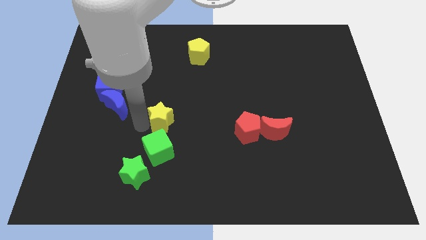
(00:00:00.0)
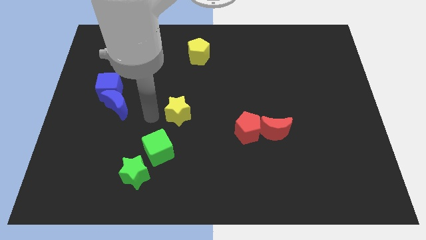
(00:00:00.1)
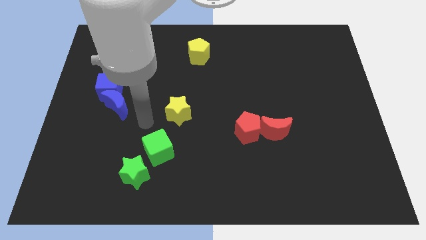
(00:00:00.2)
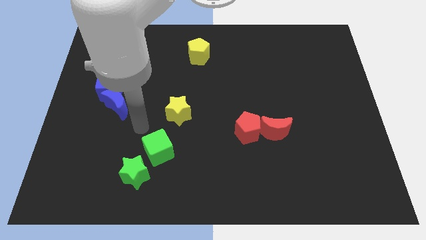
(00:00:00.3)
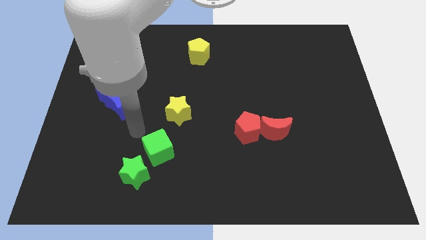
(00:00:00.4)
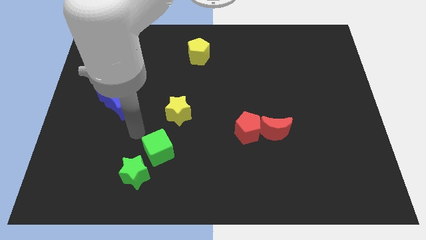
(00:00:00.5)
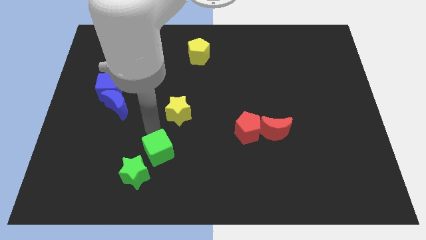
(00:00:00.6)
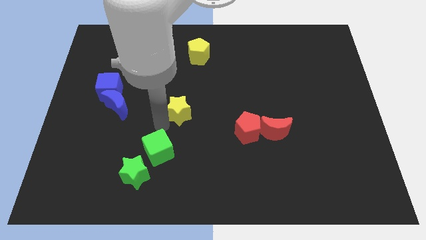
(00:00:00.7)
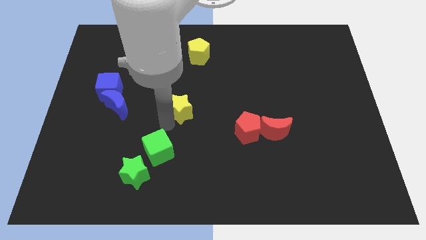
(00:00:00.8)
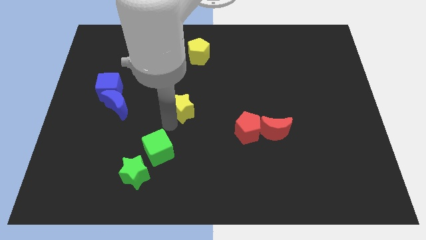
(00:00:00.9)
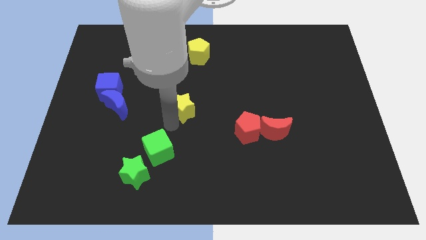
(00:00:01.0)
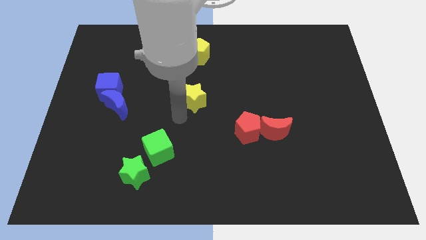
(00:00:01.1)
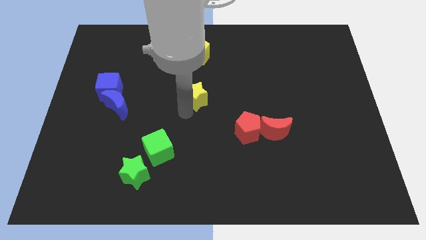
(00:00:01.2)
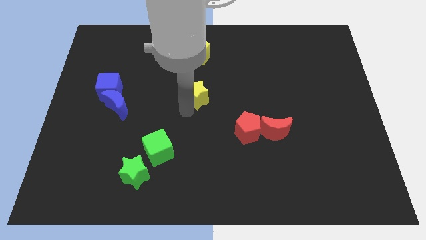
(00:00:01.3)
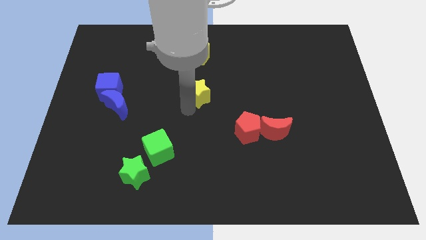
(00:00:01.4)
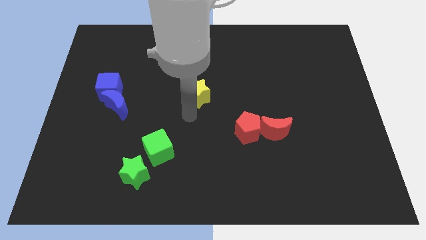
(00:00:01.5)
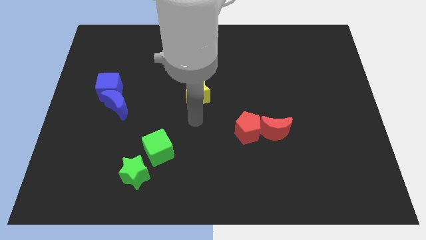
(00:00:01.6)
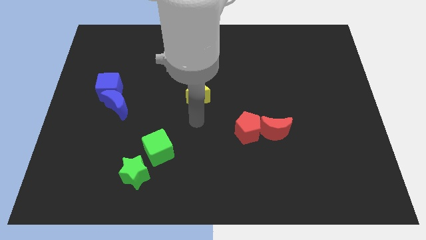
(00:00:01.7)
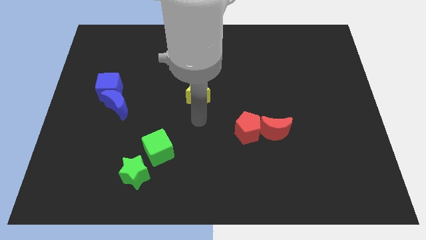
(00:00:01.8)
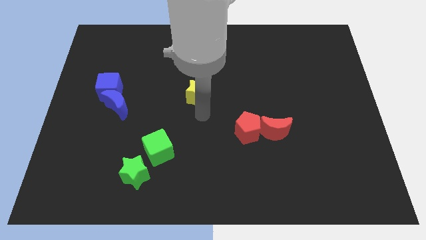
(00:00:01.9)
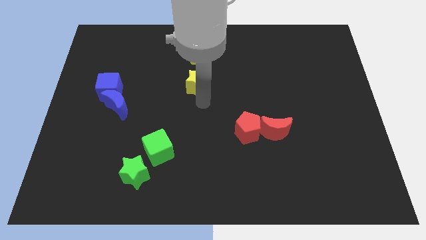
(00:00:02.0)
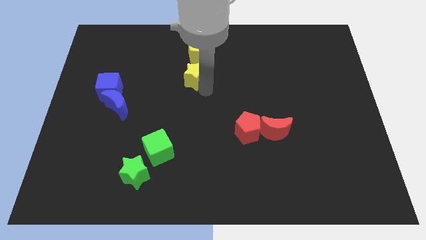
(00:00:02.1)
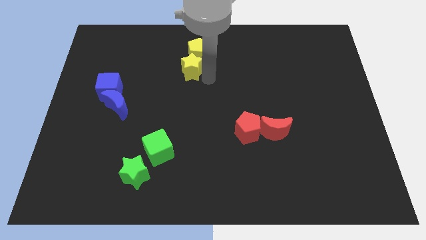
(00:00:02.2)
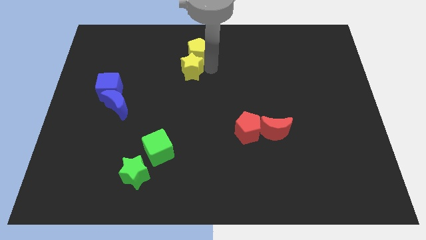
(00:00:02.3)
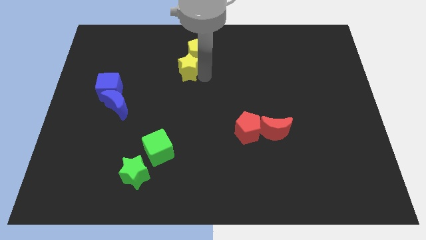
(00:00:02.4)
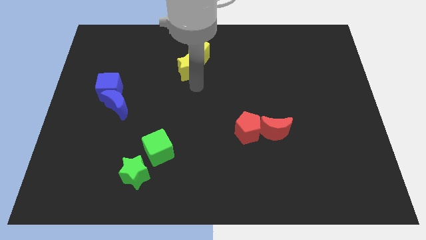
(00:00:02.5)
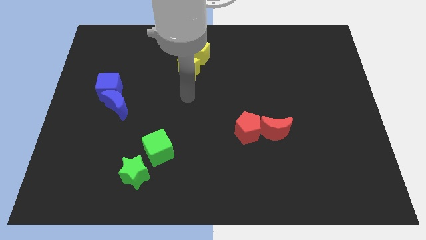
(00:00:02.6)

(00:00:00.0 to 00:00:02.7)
push the yellow star into the yellow pentagon

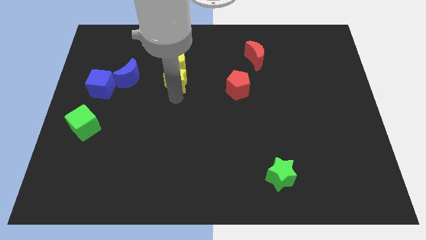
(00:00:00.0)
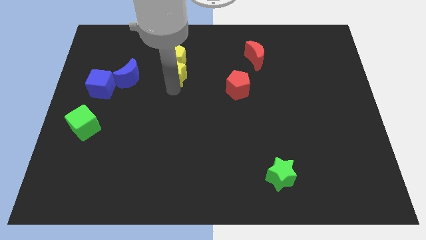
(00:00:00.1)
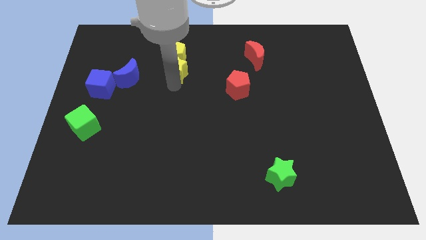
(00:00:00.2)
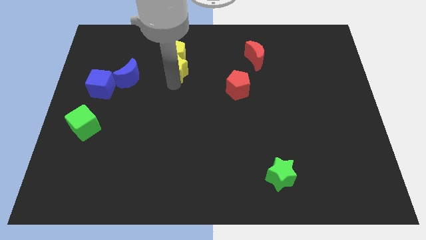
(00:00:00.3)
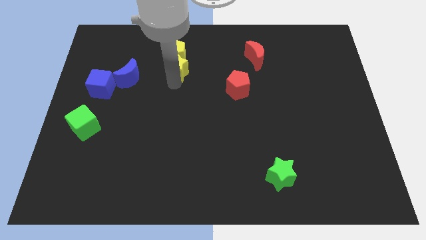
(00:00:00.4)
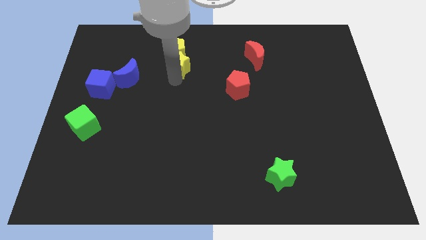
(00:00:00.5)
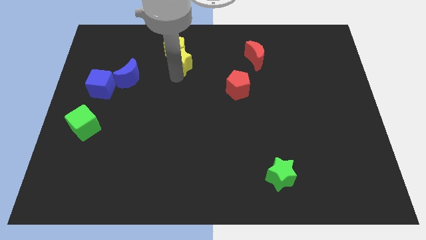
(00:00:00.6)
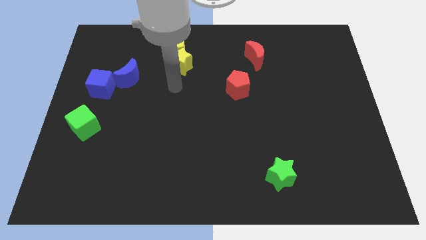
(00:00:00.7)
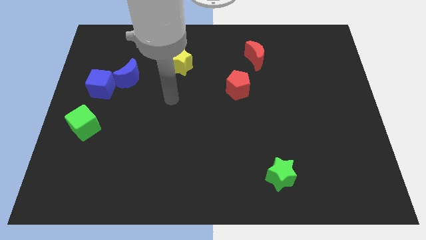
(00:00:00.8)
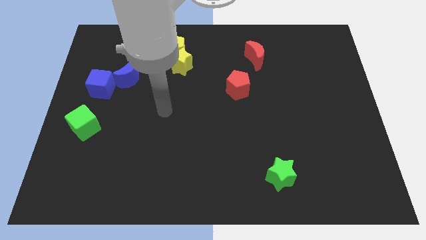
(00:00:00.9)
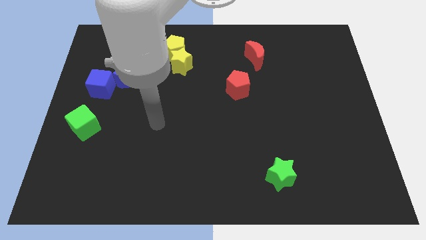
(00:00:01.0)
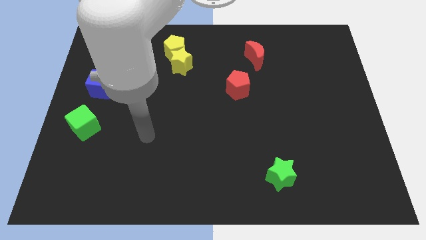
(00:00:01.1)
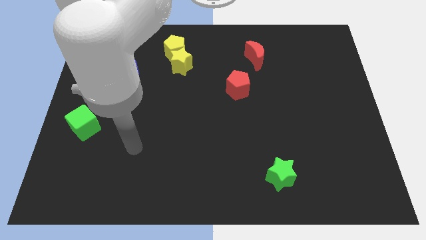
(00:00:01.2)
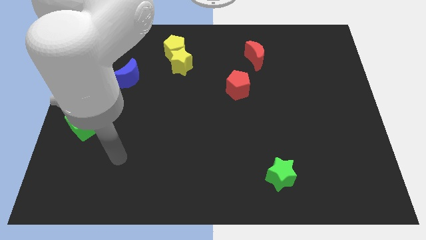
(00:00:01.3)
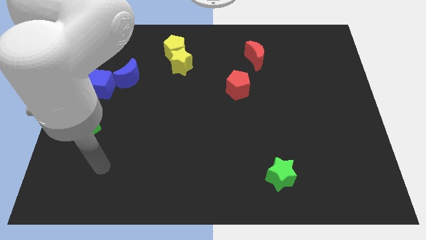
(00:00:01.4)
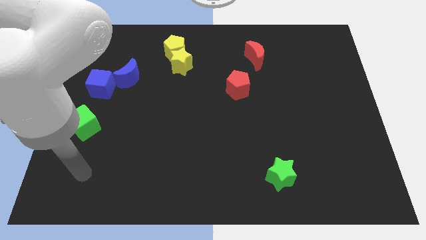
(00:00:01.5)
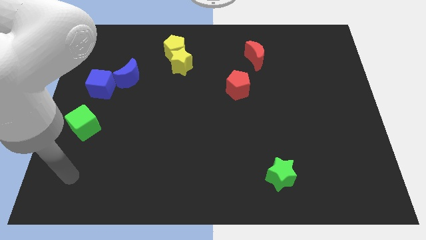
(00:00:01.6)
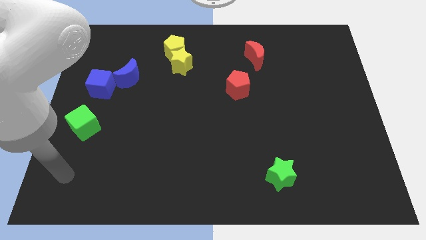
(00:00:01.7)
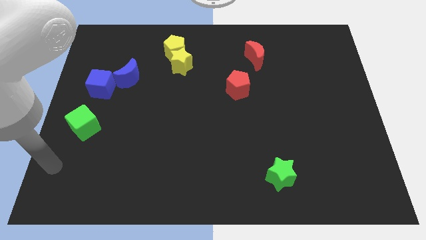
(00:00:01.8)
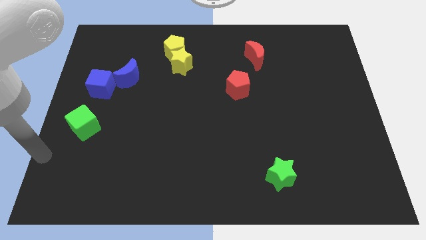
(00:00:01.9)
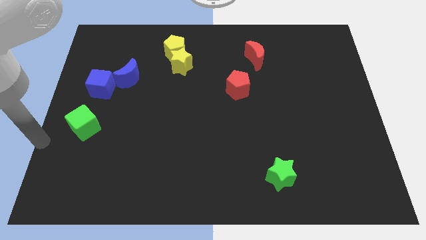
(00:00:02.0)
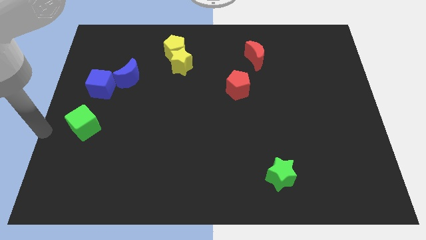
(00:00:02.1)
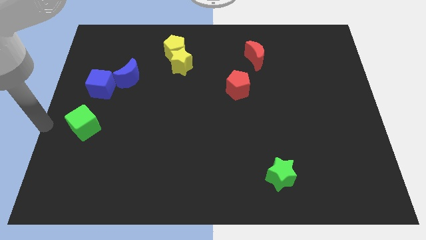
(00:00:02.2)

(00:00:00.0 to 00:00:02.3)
go and place your hand at the left of the green cube

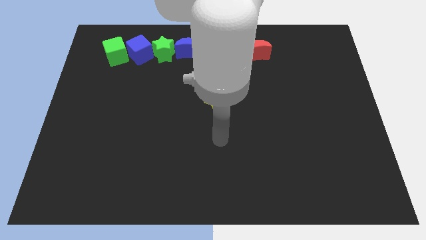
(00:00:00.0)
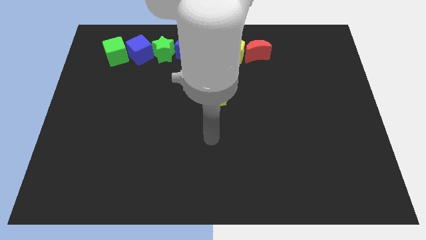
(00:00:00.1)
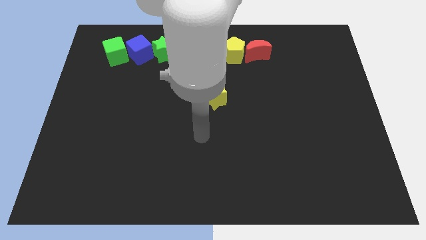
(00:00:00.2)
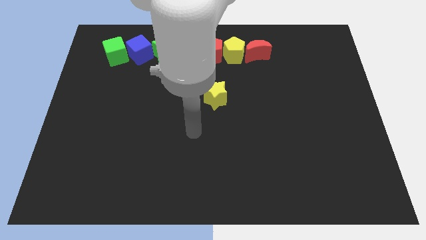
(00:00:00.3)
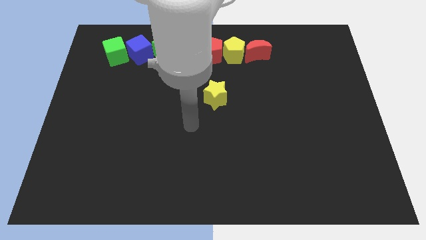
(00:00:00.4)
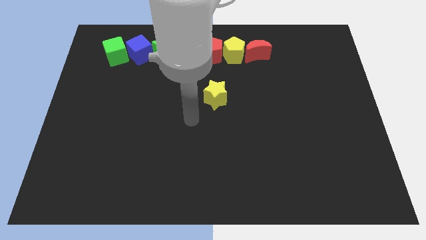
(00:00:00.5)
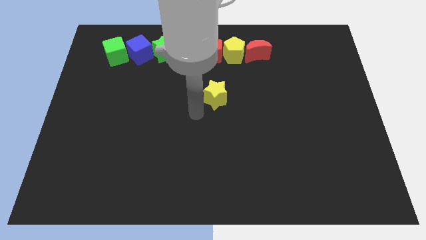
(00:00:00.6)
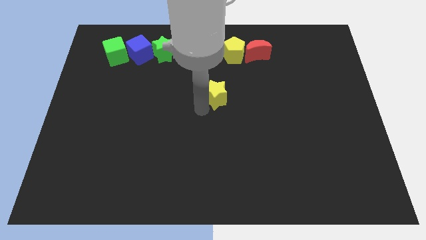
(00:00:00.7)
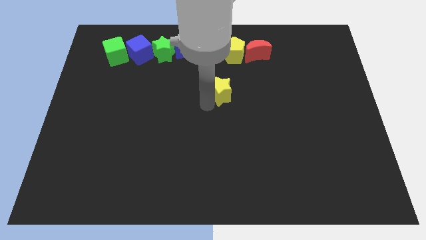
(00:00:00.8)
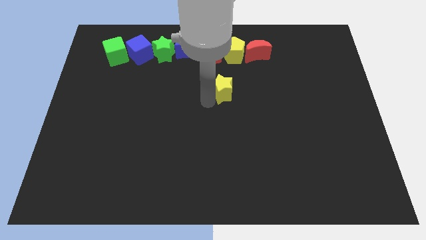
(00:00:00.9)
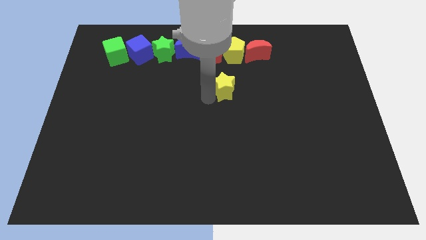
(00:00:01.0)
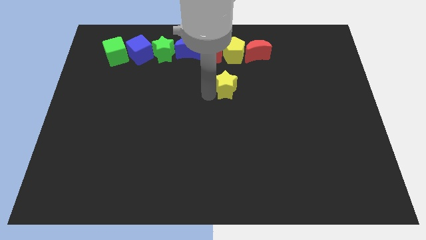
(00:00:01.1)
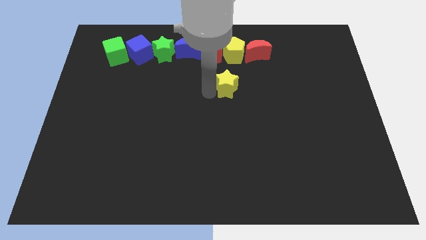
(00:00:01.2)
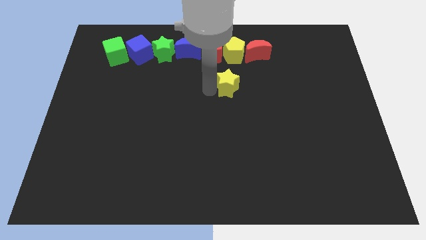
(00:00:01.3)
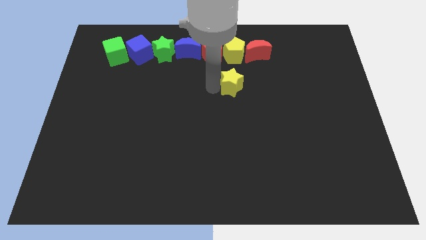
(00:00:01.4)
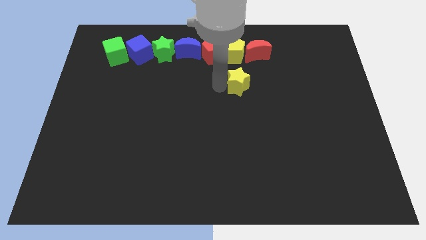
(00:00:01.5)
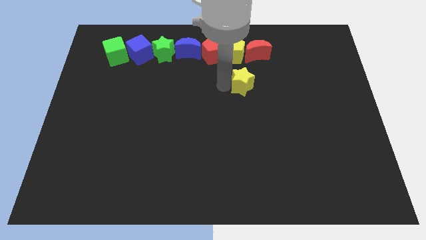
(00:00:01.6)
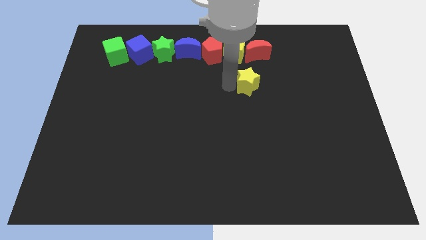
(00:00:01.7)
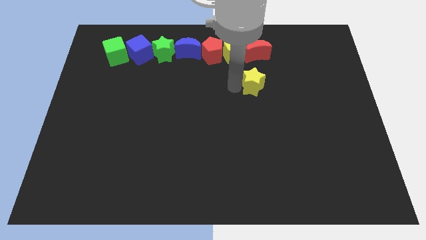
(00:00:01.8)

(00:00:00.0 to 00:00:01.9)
place the yellow star below the red crescent

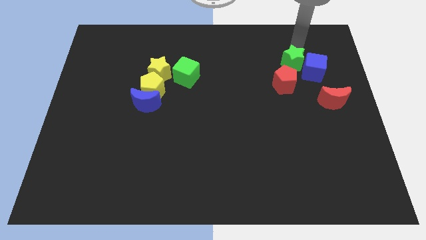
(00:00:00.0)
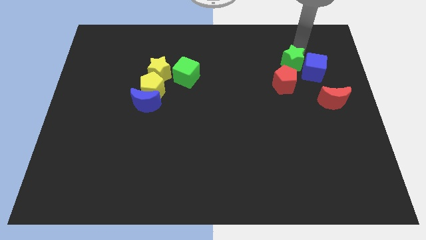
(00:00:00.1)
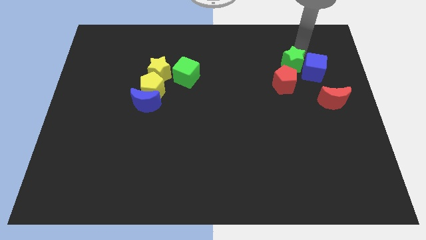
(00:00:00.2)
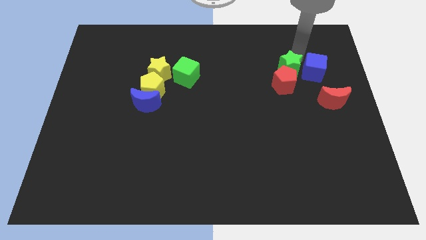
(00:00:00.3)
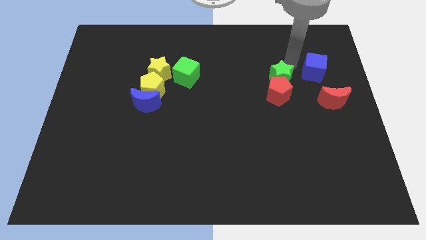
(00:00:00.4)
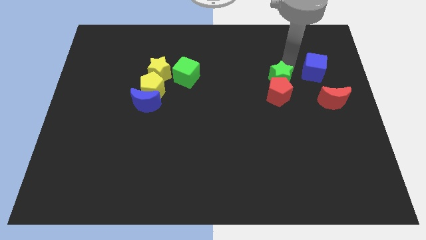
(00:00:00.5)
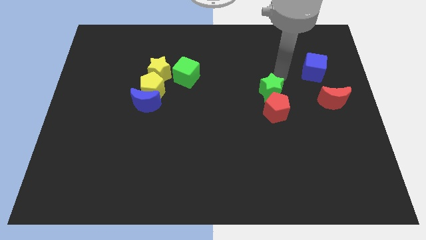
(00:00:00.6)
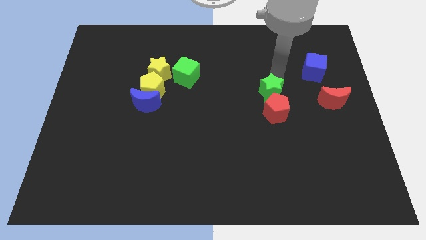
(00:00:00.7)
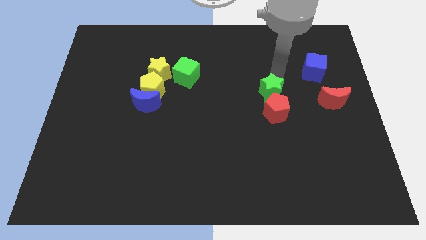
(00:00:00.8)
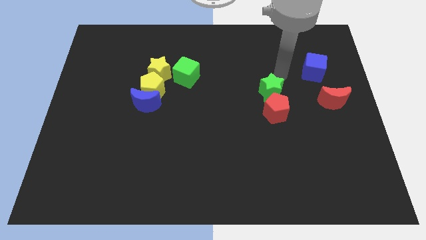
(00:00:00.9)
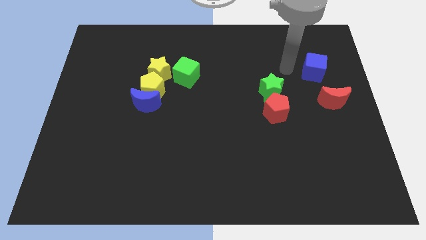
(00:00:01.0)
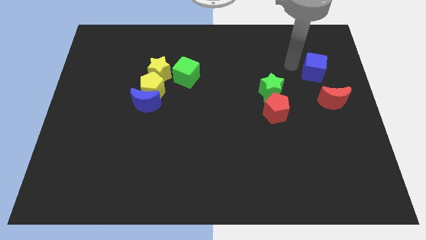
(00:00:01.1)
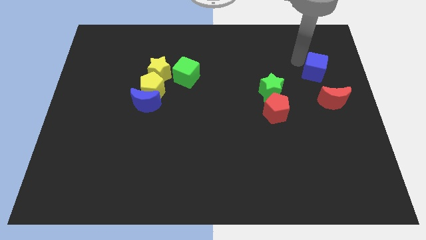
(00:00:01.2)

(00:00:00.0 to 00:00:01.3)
push the green star into the red pentagon

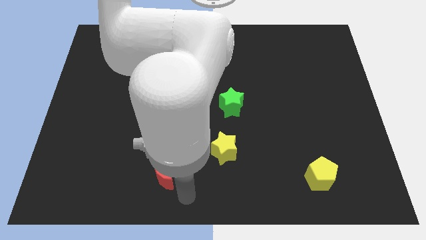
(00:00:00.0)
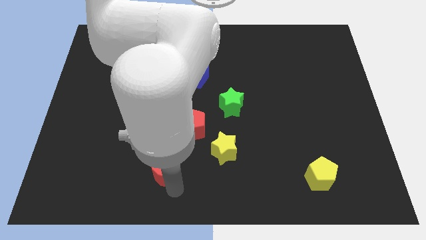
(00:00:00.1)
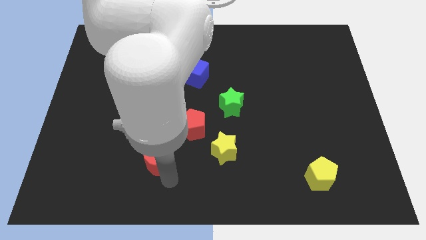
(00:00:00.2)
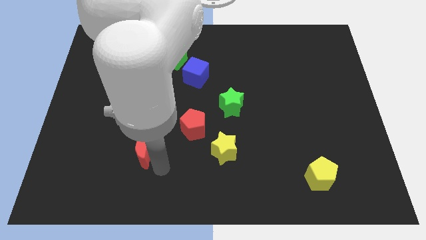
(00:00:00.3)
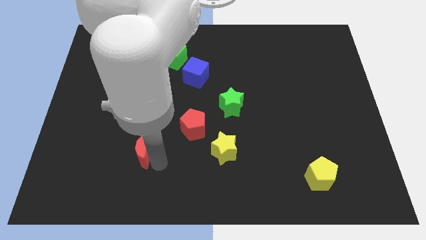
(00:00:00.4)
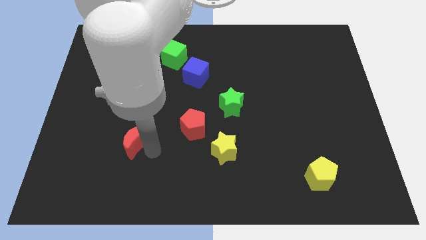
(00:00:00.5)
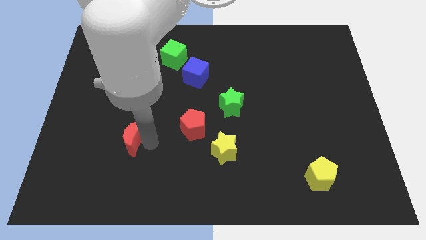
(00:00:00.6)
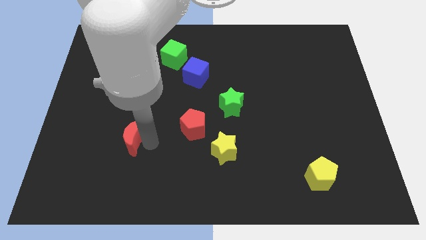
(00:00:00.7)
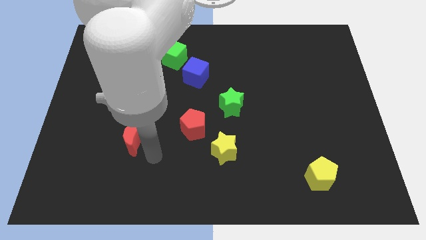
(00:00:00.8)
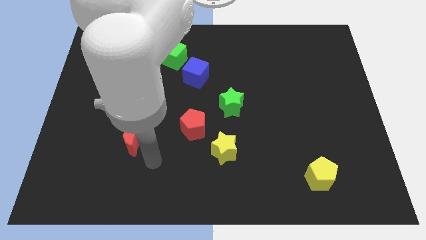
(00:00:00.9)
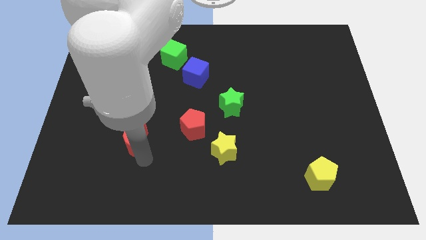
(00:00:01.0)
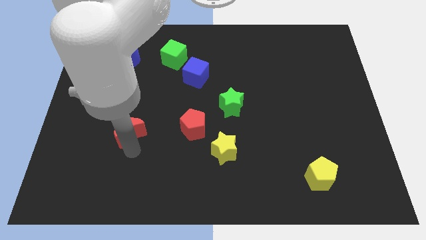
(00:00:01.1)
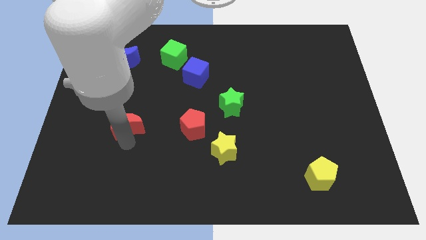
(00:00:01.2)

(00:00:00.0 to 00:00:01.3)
place red moon to the right of red crescent
